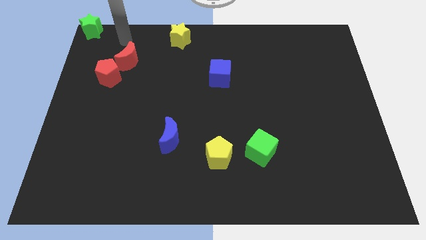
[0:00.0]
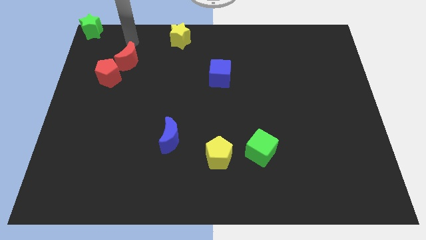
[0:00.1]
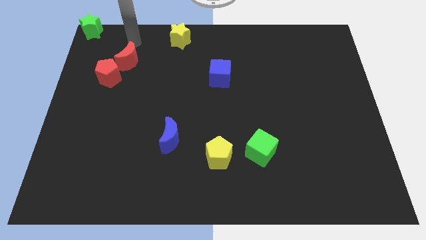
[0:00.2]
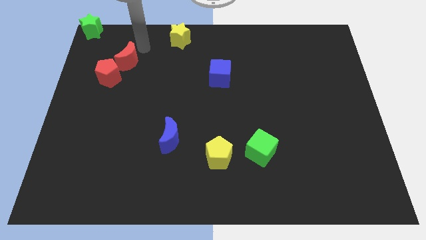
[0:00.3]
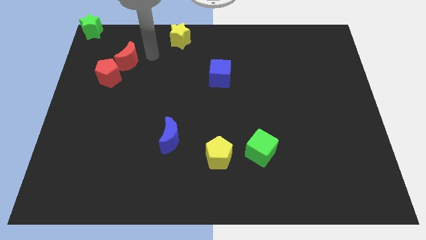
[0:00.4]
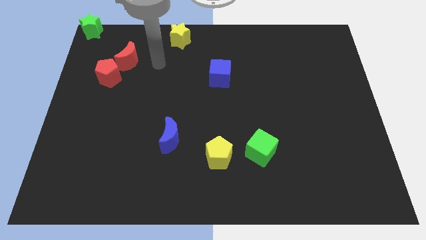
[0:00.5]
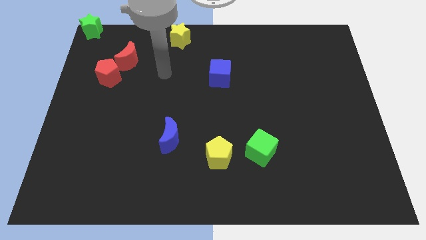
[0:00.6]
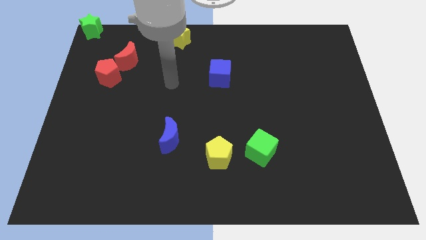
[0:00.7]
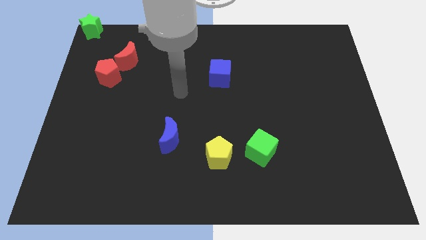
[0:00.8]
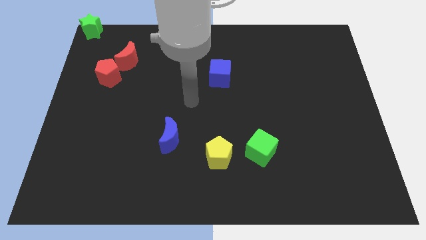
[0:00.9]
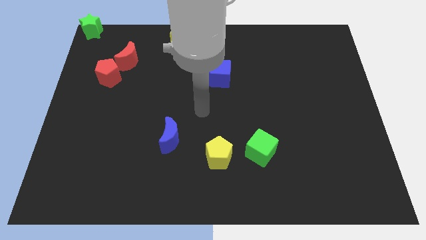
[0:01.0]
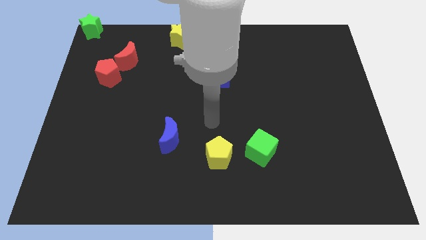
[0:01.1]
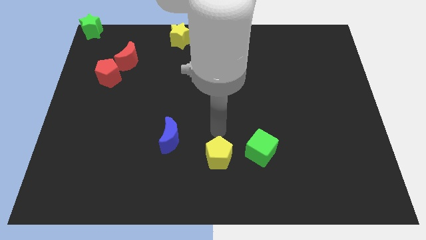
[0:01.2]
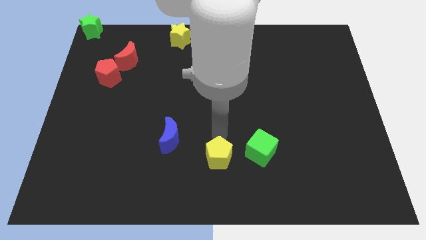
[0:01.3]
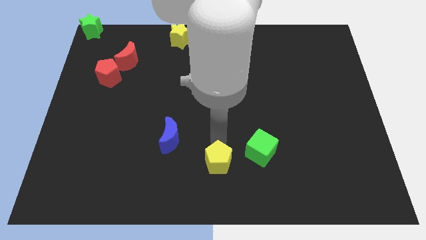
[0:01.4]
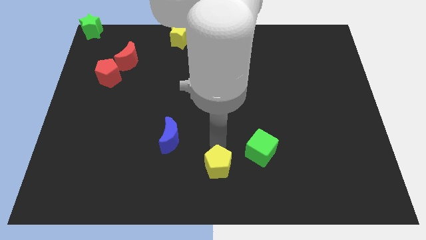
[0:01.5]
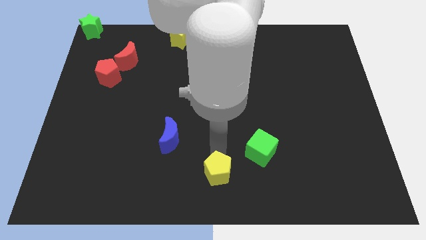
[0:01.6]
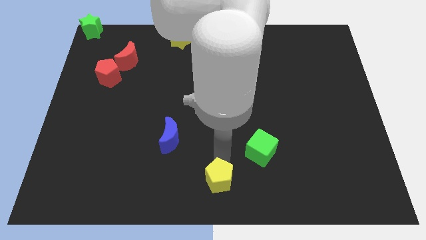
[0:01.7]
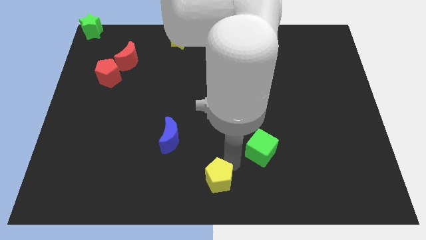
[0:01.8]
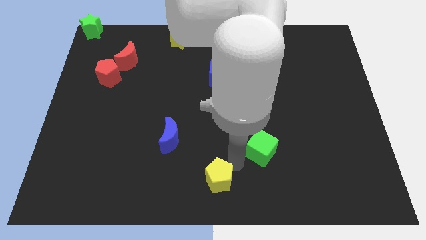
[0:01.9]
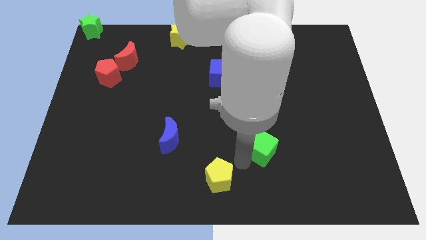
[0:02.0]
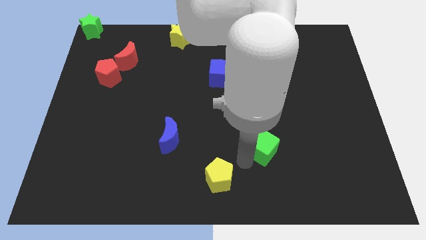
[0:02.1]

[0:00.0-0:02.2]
push yellow pentagon slightly down

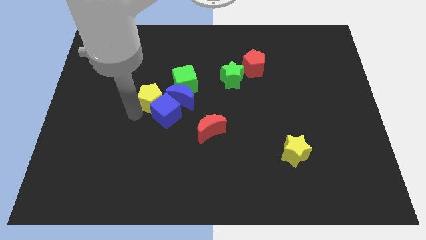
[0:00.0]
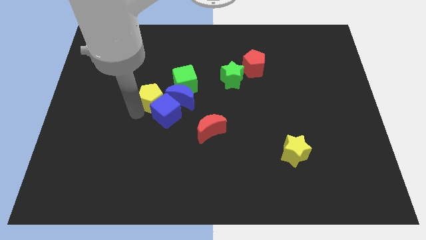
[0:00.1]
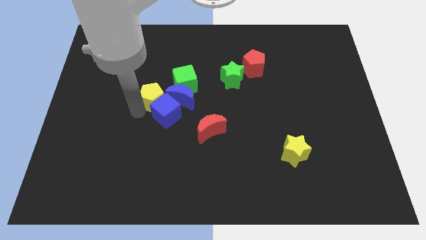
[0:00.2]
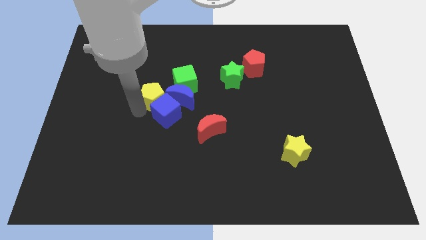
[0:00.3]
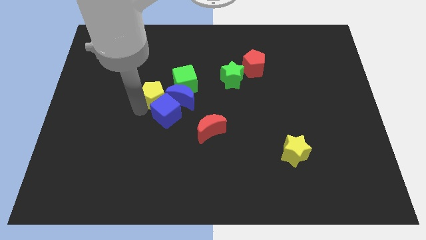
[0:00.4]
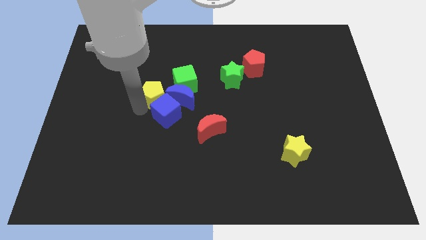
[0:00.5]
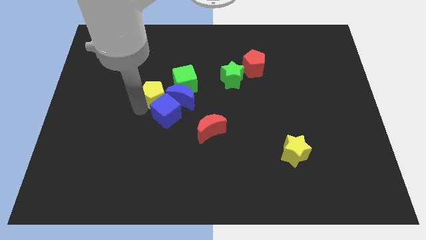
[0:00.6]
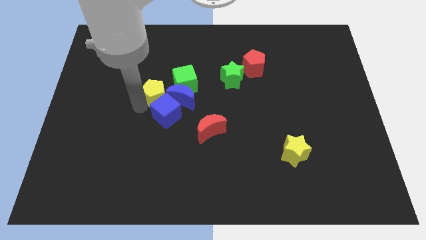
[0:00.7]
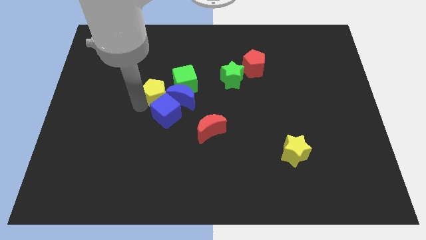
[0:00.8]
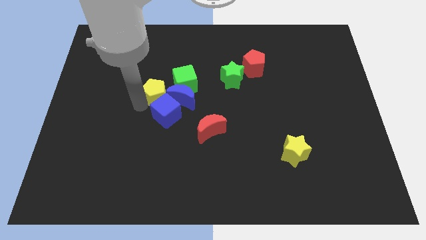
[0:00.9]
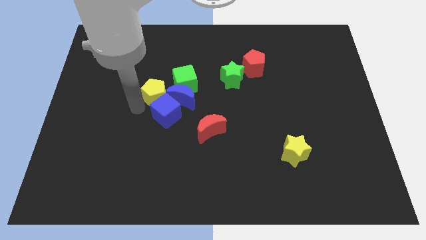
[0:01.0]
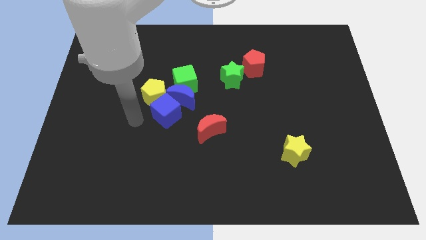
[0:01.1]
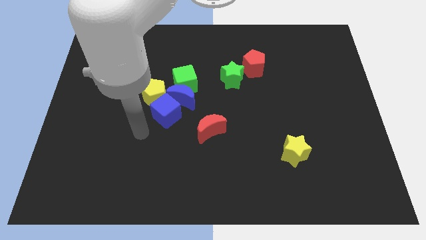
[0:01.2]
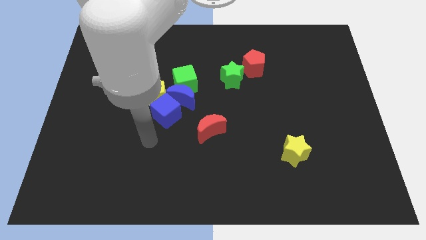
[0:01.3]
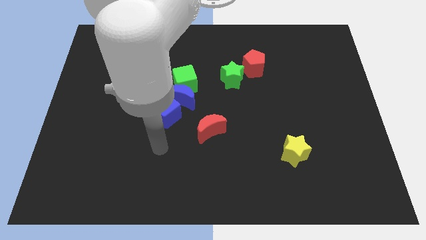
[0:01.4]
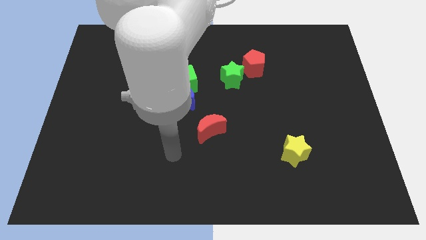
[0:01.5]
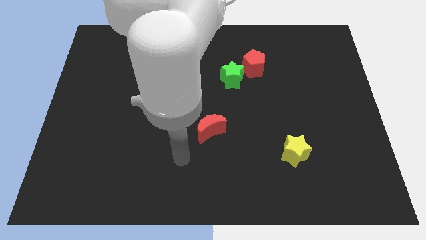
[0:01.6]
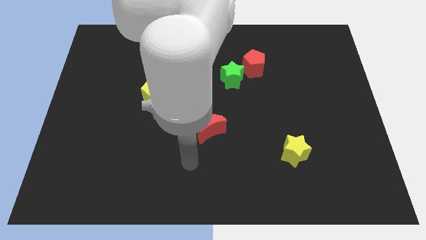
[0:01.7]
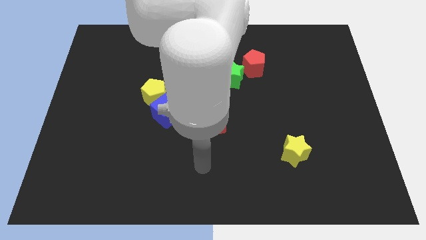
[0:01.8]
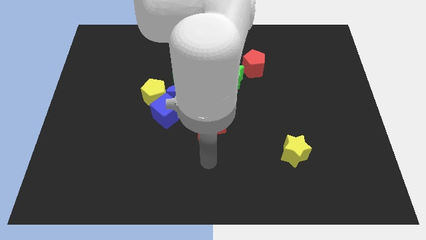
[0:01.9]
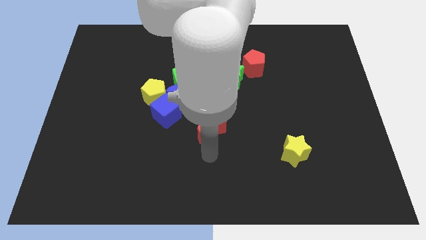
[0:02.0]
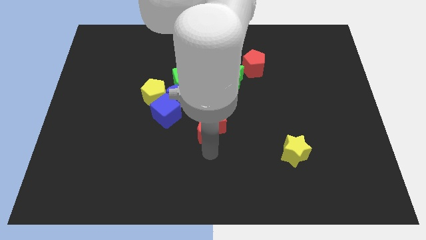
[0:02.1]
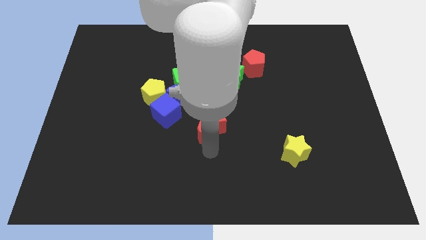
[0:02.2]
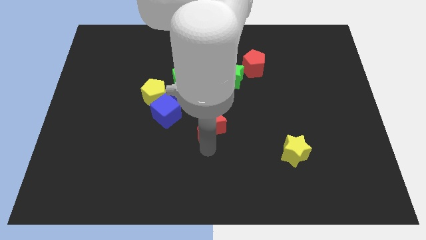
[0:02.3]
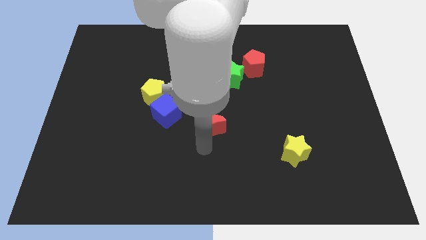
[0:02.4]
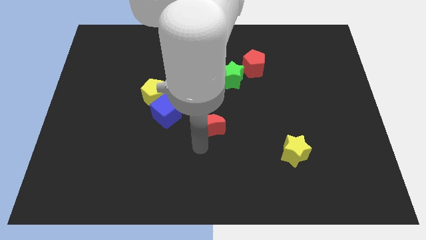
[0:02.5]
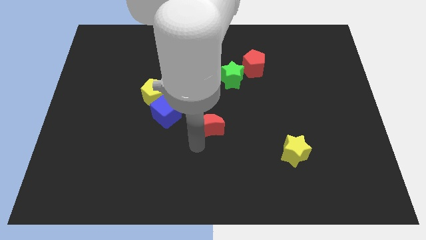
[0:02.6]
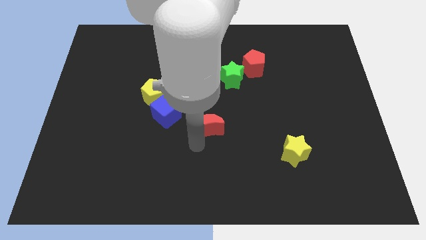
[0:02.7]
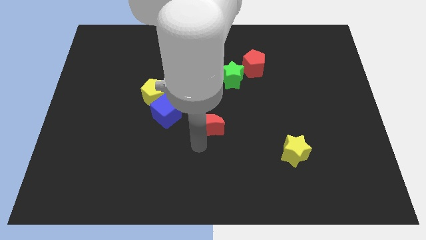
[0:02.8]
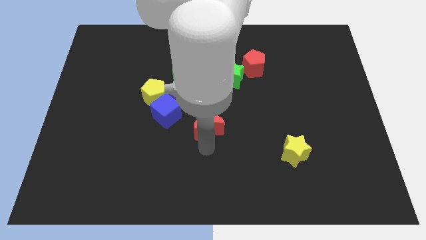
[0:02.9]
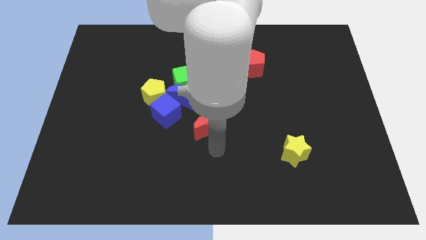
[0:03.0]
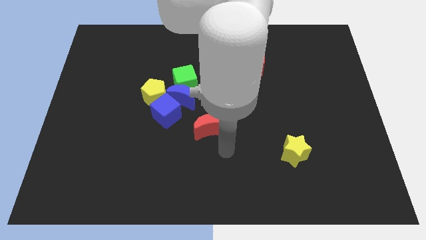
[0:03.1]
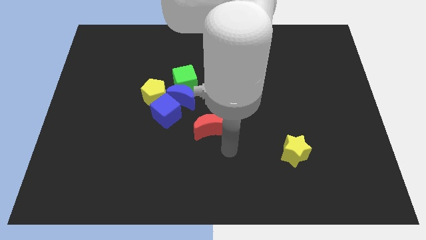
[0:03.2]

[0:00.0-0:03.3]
tap on the bottom left side of the red moon

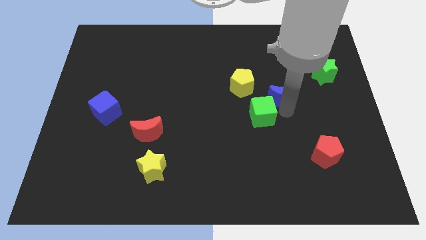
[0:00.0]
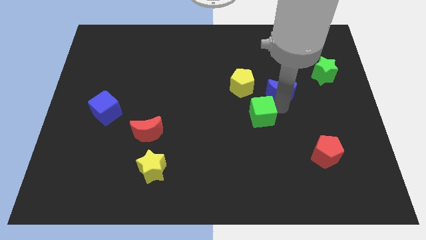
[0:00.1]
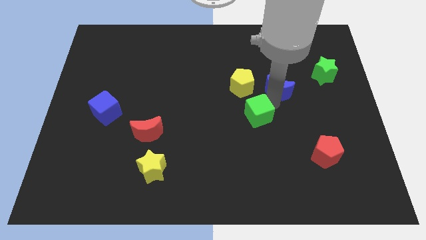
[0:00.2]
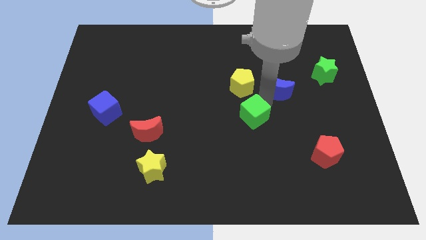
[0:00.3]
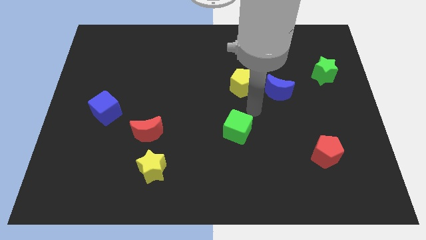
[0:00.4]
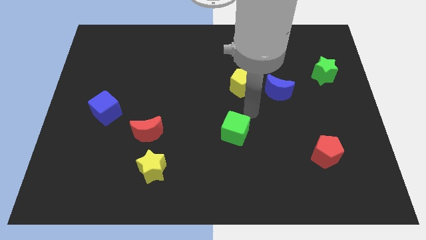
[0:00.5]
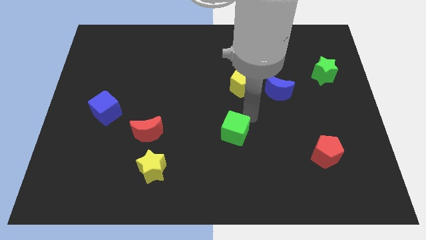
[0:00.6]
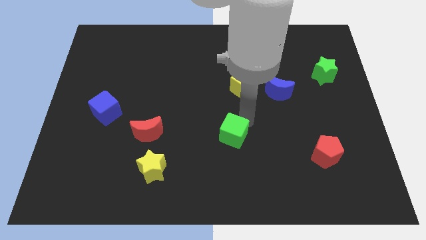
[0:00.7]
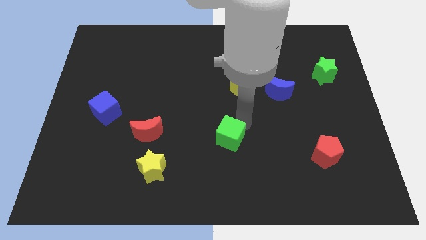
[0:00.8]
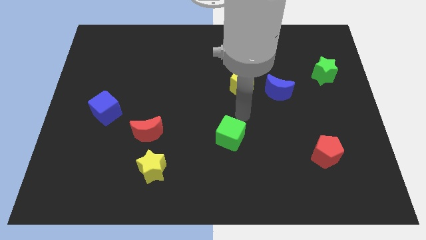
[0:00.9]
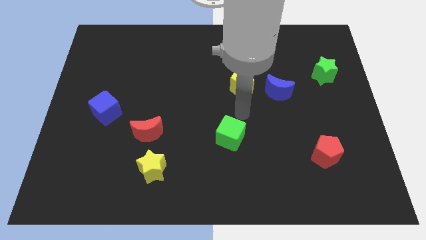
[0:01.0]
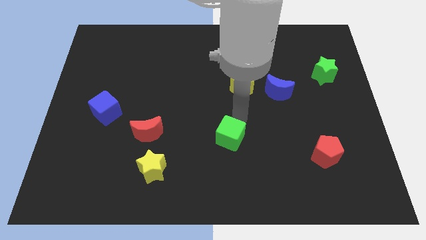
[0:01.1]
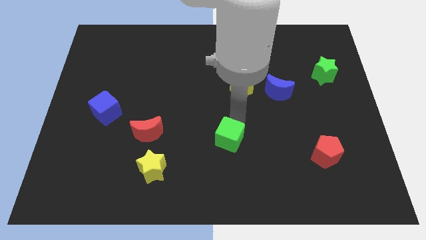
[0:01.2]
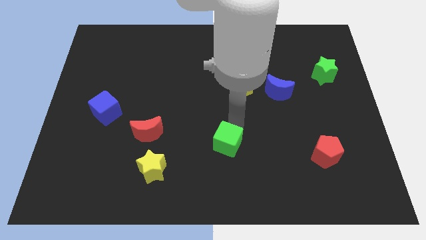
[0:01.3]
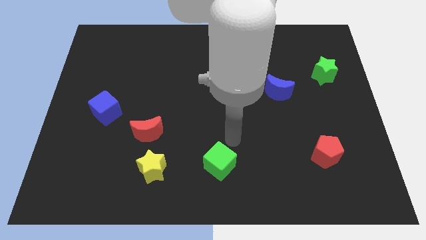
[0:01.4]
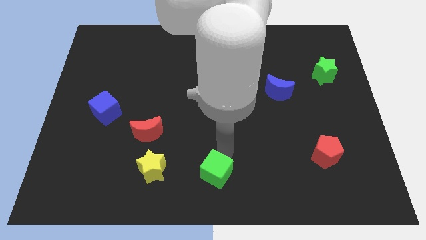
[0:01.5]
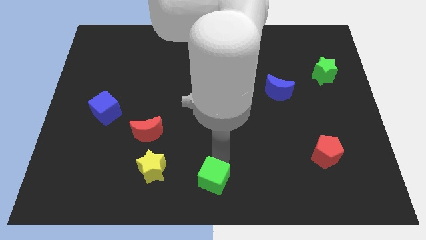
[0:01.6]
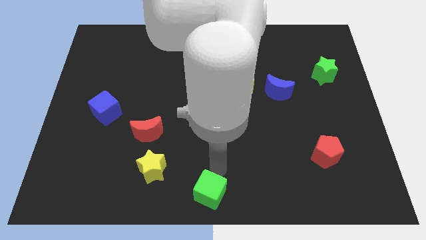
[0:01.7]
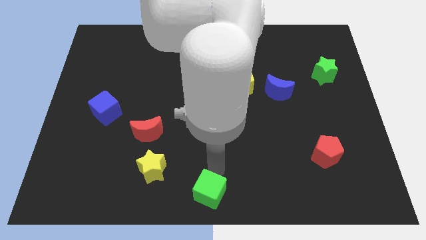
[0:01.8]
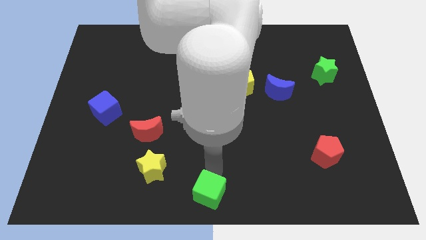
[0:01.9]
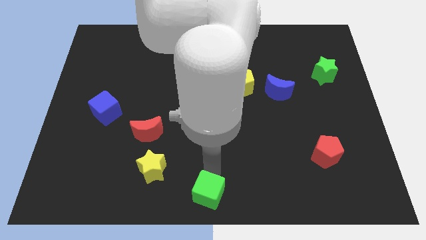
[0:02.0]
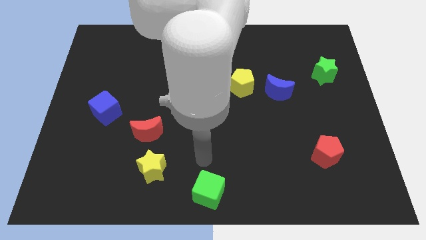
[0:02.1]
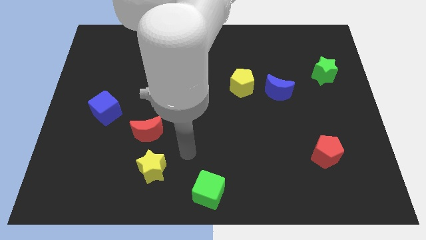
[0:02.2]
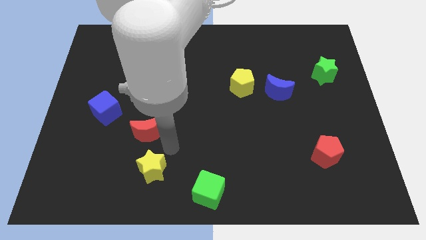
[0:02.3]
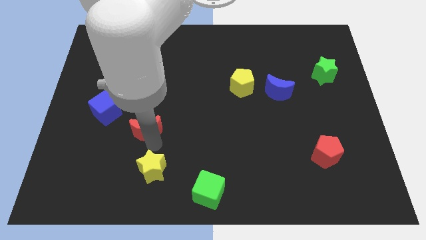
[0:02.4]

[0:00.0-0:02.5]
push the green cube to the bottom center

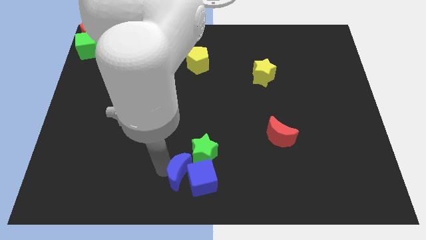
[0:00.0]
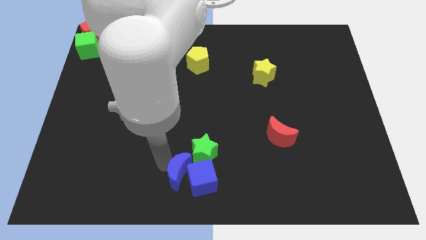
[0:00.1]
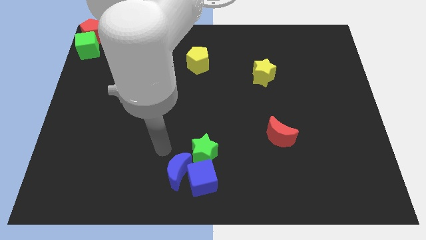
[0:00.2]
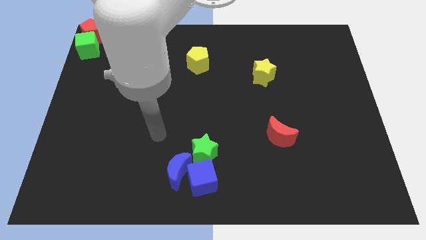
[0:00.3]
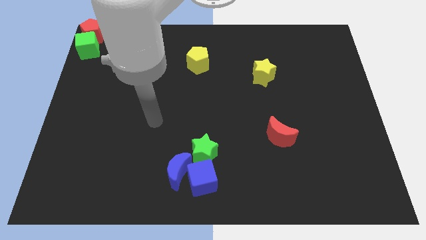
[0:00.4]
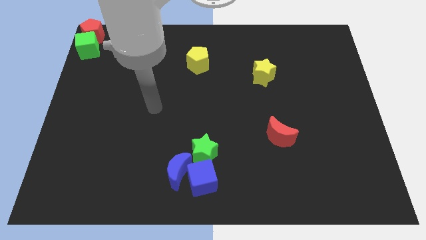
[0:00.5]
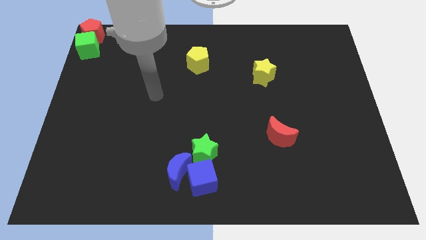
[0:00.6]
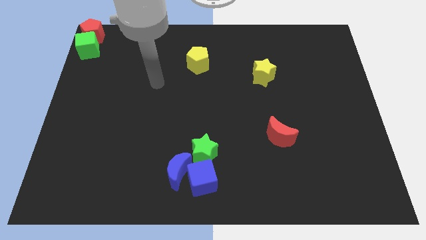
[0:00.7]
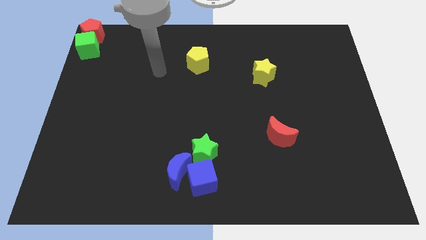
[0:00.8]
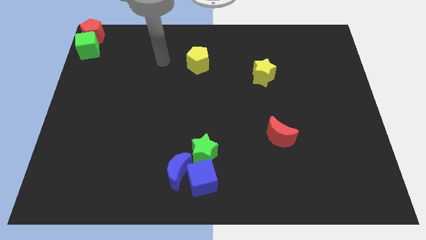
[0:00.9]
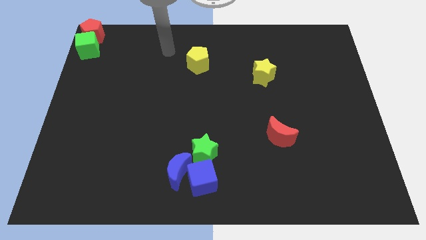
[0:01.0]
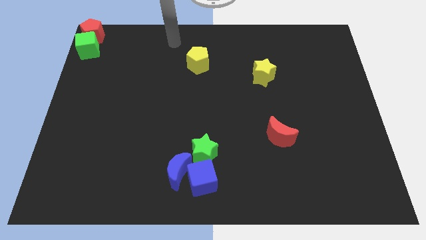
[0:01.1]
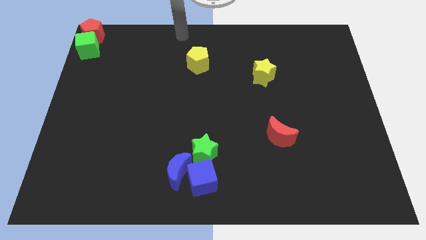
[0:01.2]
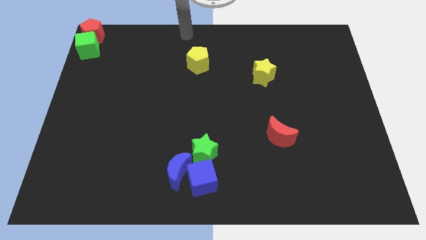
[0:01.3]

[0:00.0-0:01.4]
move your arm away from blue crescent
